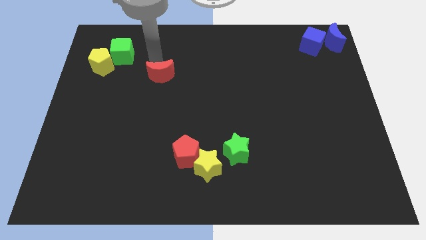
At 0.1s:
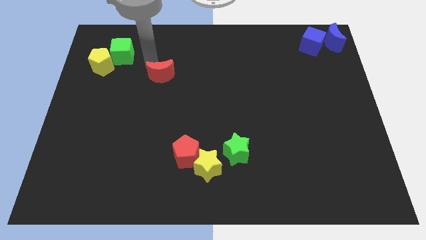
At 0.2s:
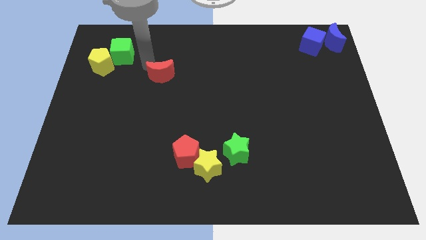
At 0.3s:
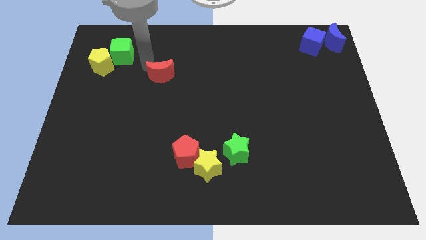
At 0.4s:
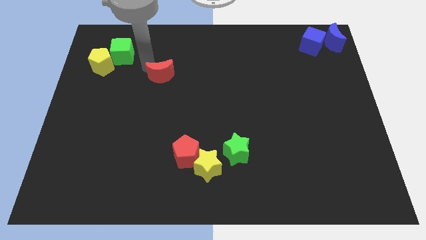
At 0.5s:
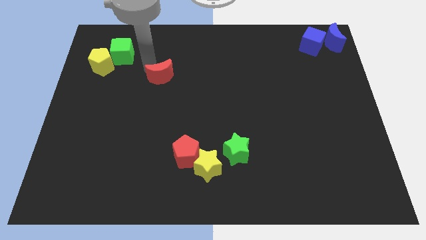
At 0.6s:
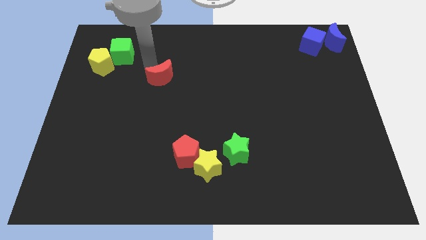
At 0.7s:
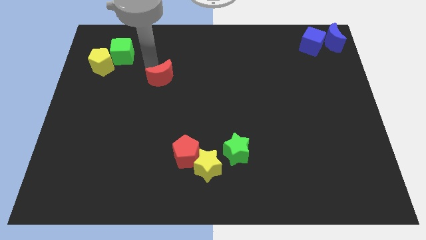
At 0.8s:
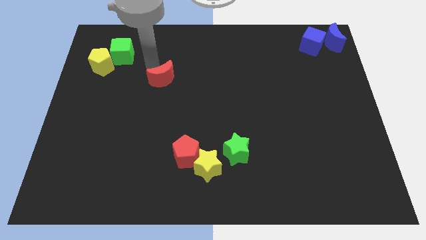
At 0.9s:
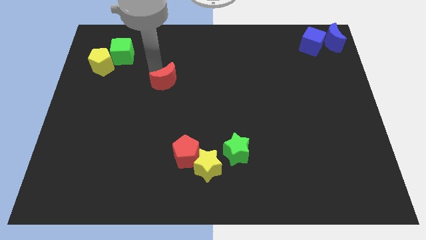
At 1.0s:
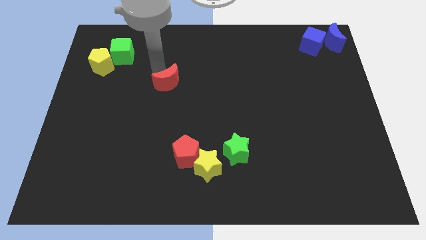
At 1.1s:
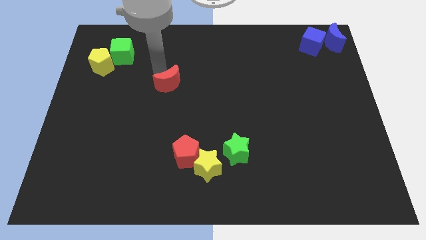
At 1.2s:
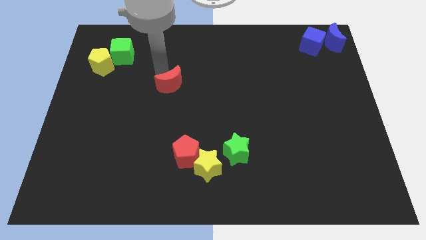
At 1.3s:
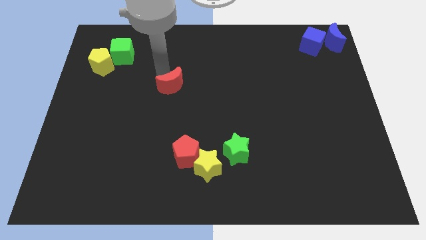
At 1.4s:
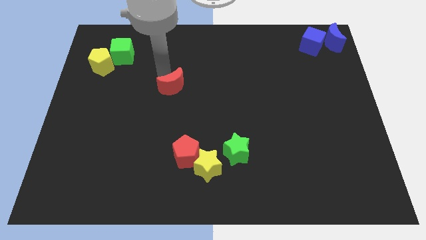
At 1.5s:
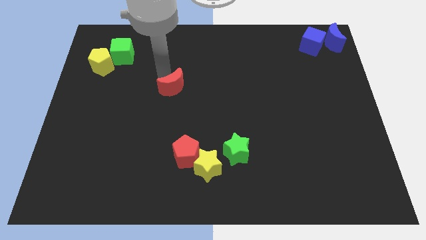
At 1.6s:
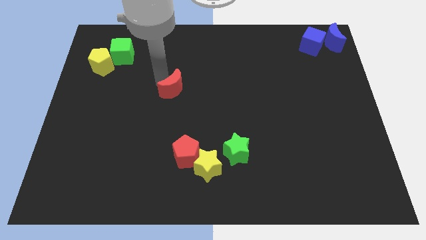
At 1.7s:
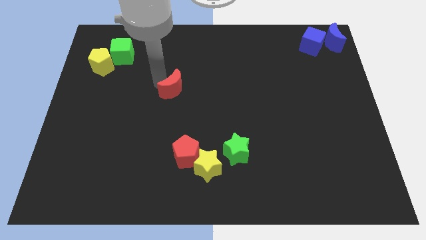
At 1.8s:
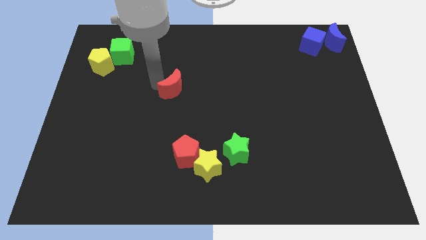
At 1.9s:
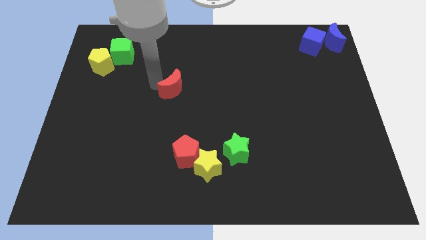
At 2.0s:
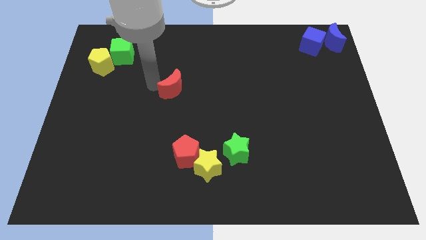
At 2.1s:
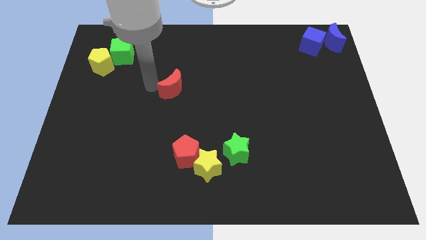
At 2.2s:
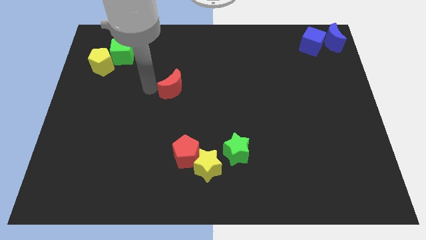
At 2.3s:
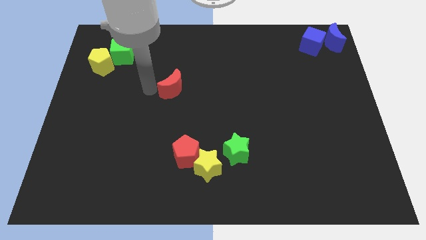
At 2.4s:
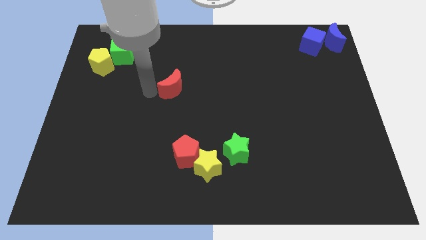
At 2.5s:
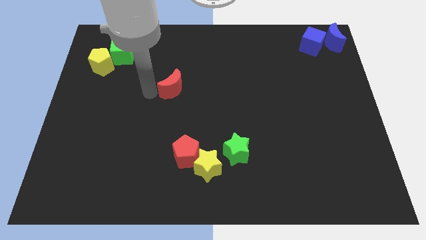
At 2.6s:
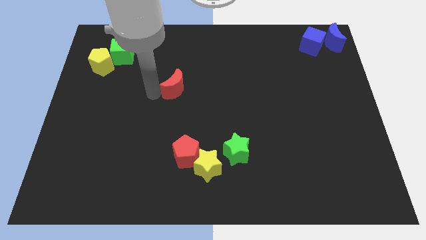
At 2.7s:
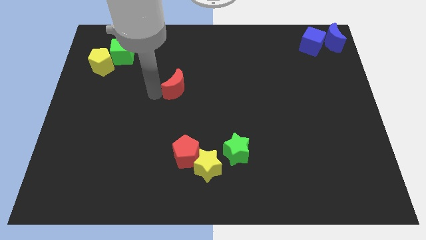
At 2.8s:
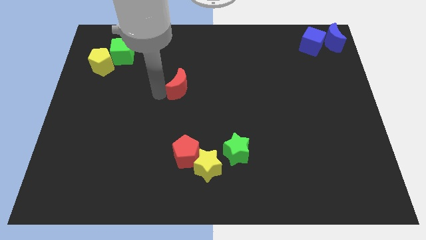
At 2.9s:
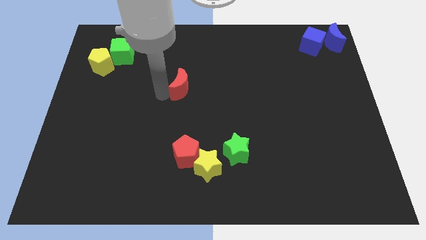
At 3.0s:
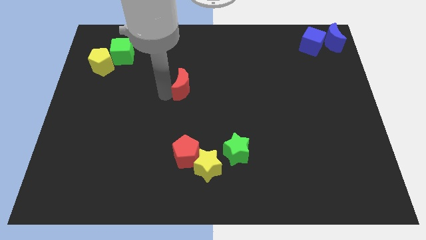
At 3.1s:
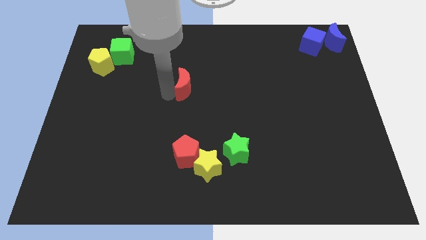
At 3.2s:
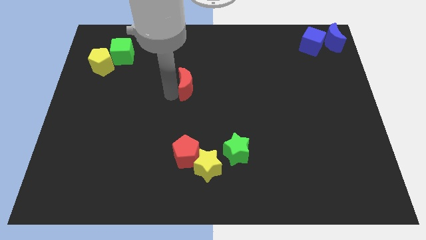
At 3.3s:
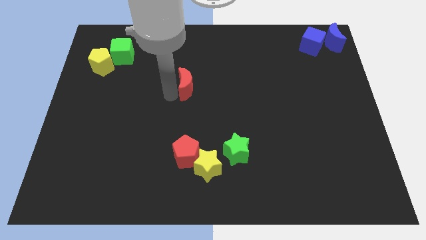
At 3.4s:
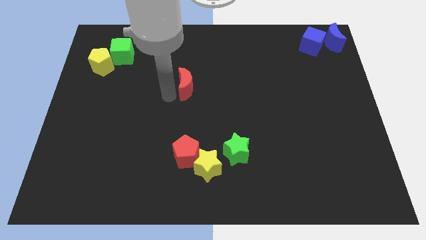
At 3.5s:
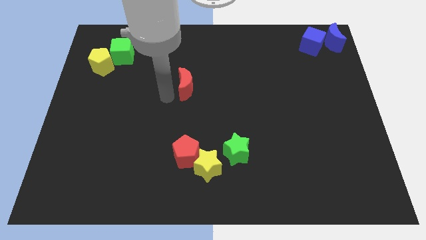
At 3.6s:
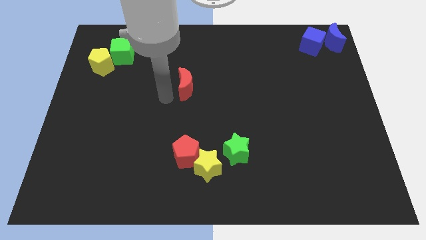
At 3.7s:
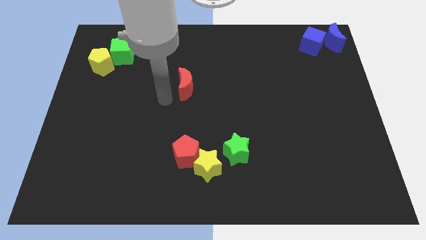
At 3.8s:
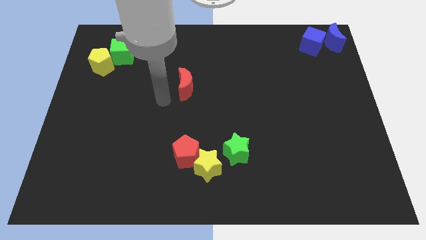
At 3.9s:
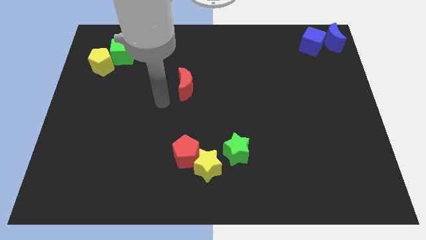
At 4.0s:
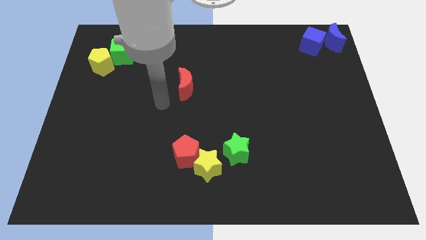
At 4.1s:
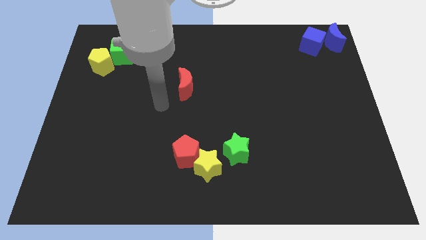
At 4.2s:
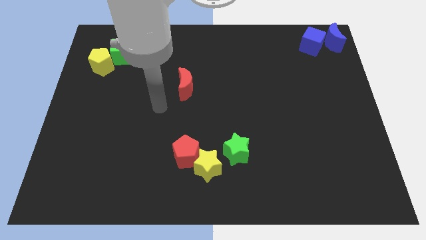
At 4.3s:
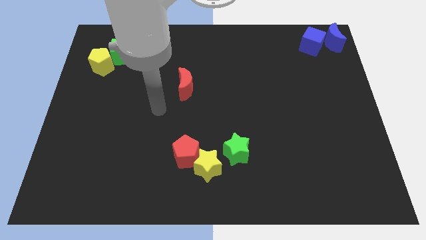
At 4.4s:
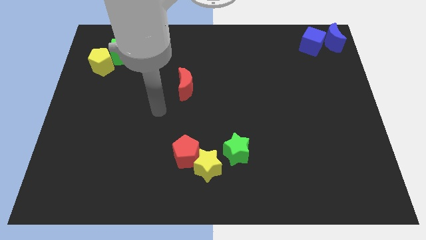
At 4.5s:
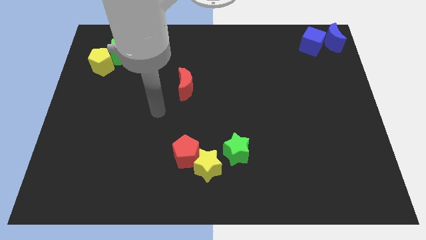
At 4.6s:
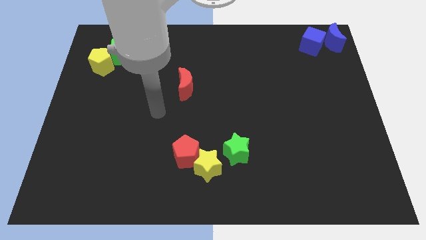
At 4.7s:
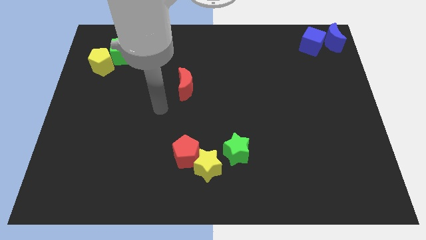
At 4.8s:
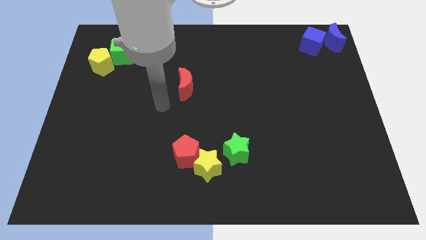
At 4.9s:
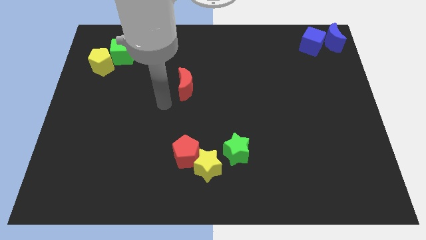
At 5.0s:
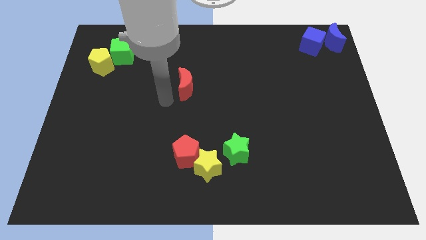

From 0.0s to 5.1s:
place red moon above the red pentagon

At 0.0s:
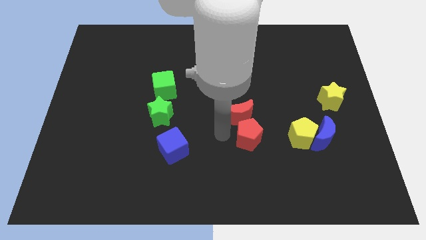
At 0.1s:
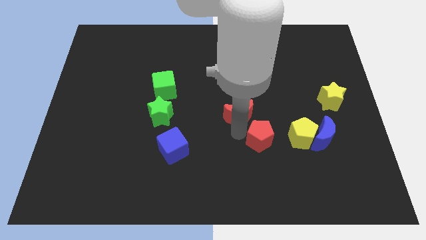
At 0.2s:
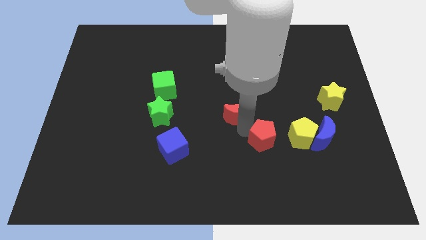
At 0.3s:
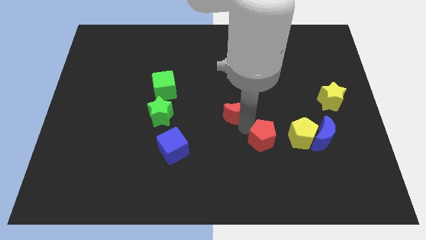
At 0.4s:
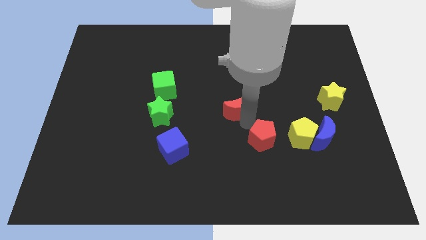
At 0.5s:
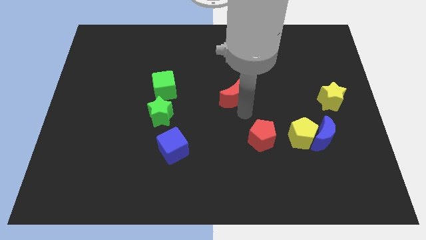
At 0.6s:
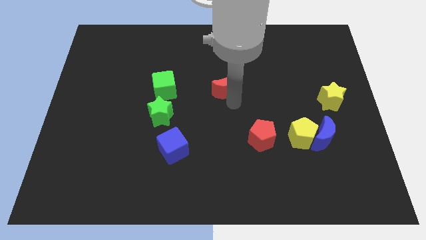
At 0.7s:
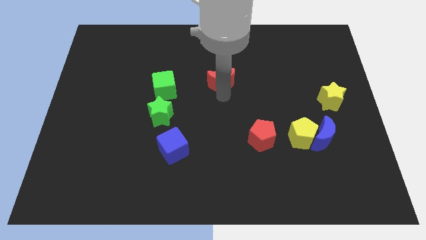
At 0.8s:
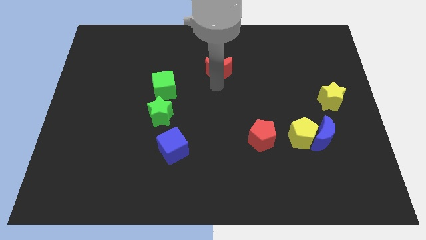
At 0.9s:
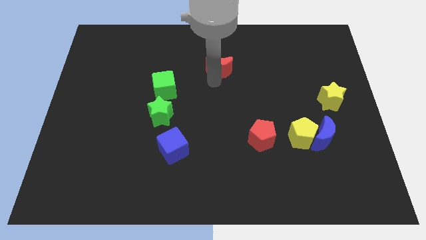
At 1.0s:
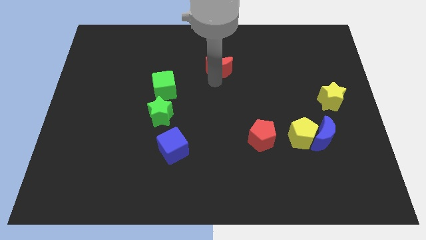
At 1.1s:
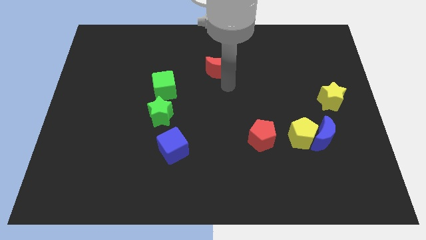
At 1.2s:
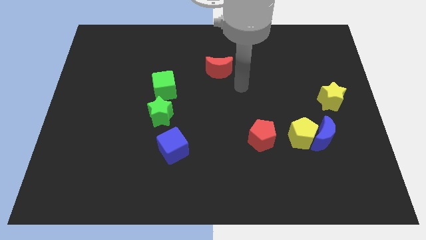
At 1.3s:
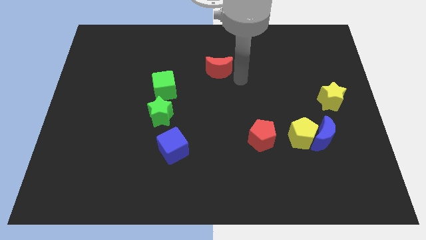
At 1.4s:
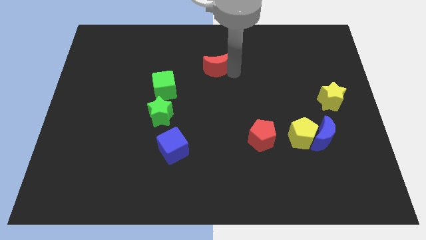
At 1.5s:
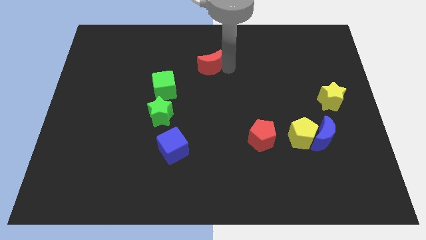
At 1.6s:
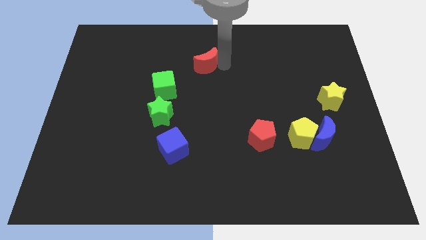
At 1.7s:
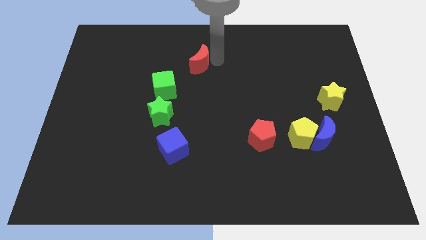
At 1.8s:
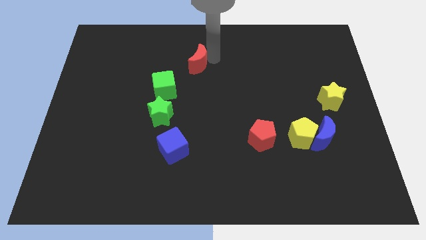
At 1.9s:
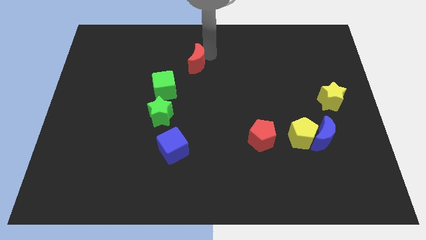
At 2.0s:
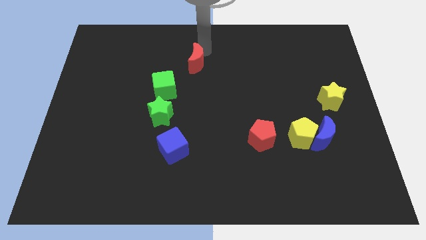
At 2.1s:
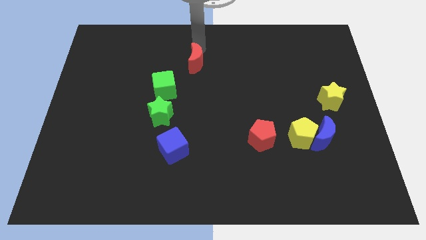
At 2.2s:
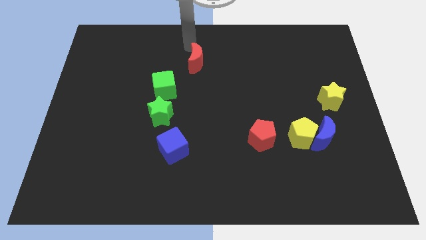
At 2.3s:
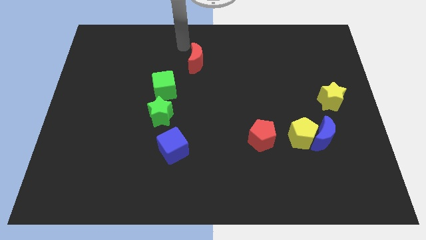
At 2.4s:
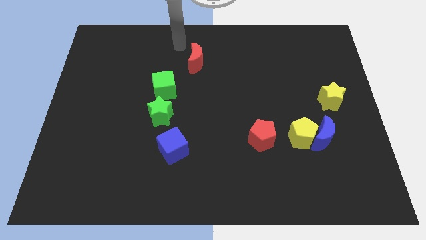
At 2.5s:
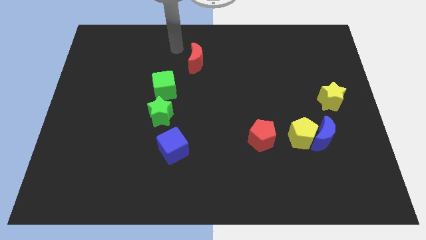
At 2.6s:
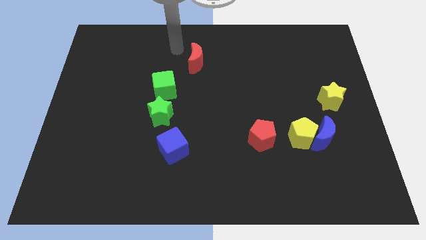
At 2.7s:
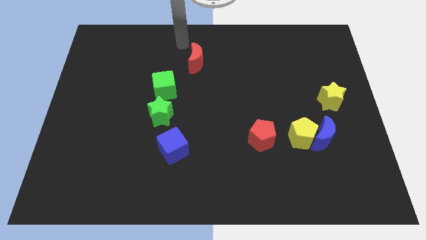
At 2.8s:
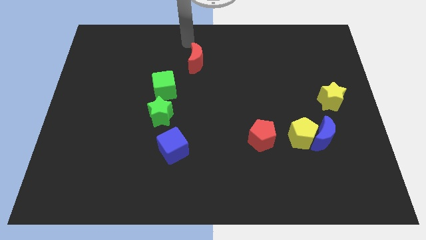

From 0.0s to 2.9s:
move red moon away from red pentagon

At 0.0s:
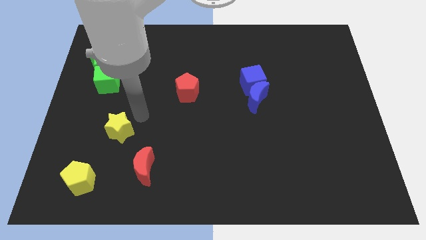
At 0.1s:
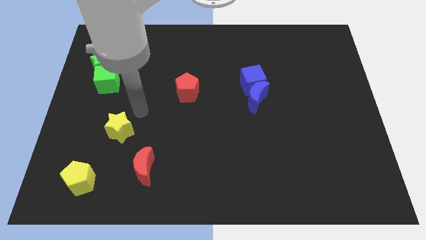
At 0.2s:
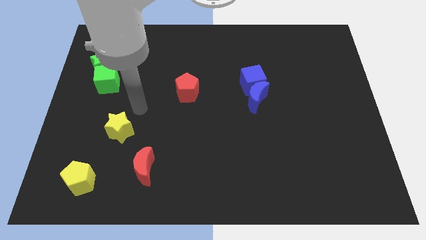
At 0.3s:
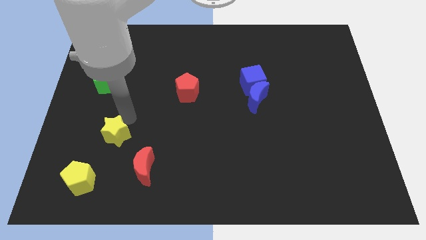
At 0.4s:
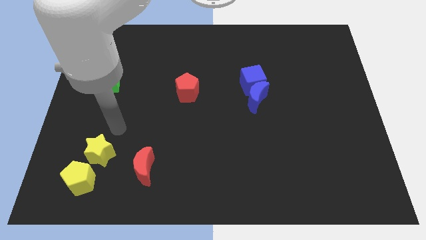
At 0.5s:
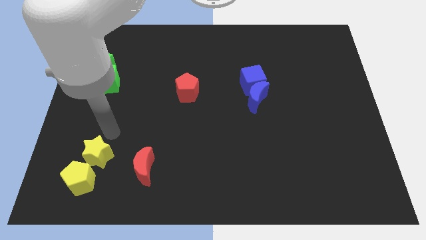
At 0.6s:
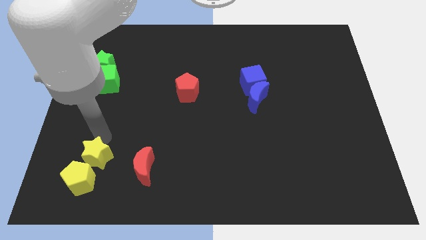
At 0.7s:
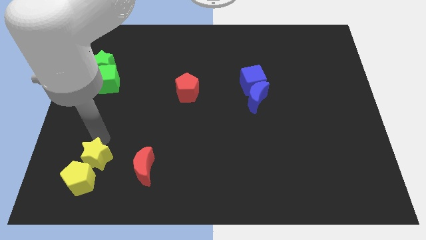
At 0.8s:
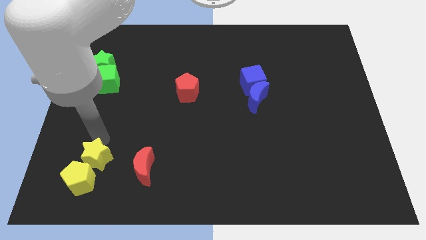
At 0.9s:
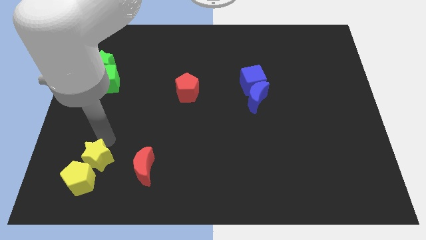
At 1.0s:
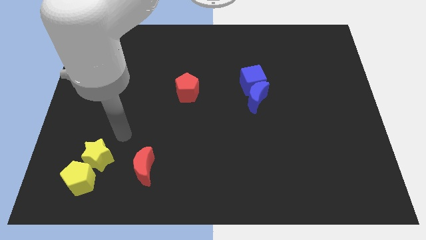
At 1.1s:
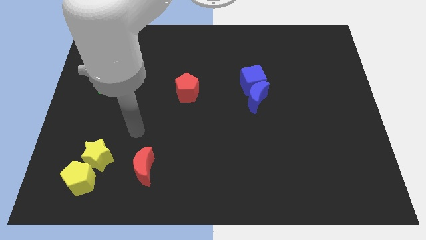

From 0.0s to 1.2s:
push the yellow star to the top of yellow pentagon

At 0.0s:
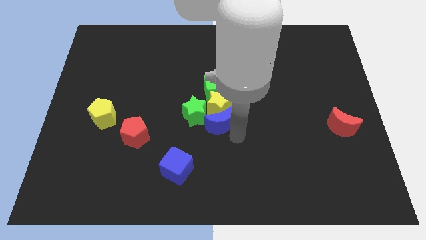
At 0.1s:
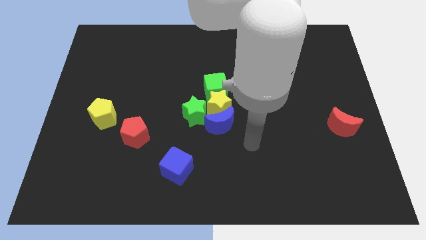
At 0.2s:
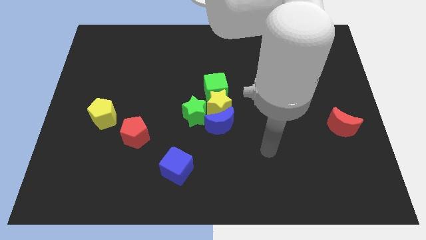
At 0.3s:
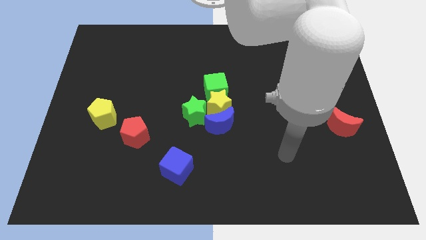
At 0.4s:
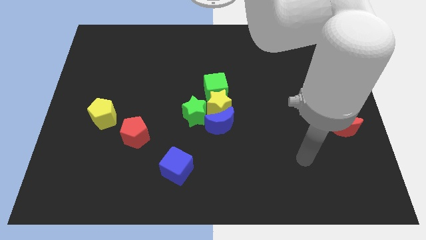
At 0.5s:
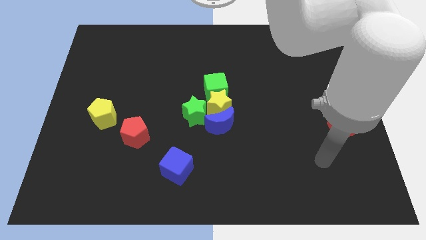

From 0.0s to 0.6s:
move the arm away from the blue moon
